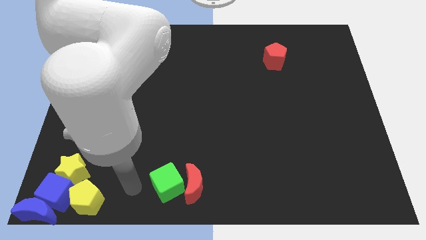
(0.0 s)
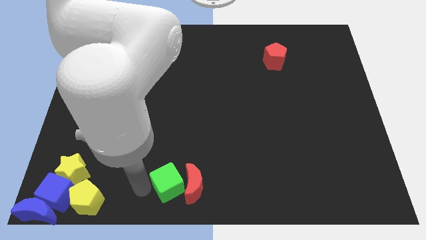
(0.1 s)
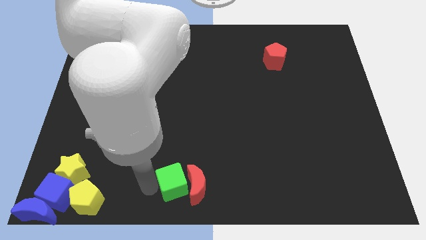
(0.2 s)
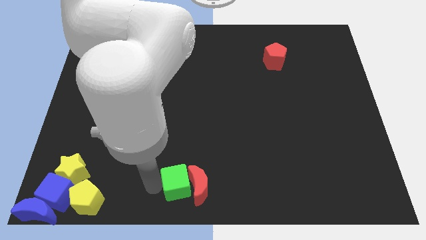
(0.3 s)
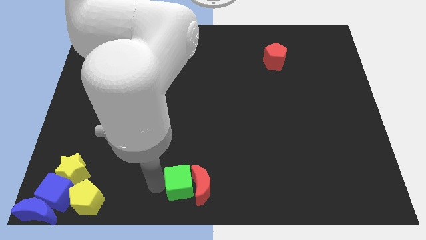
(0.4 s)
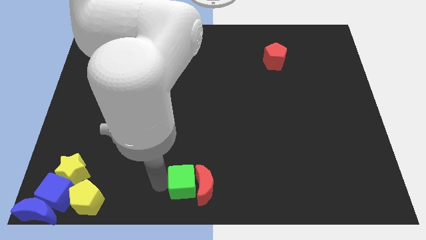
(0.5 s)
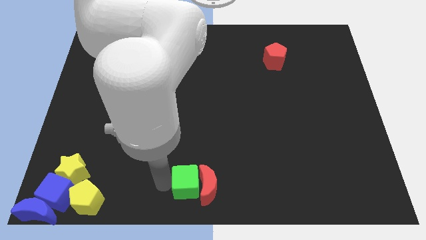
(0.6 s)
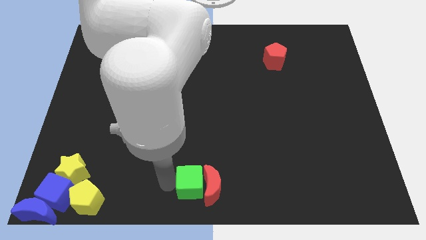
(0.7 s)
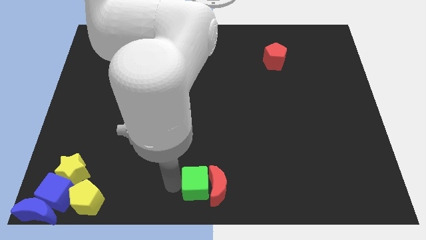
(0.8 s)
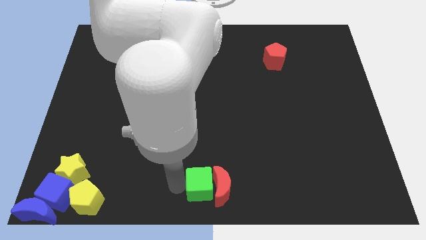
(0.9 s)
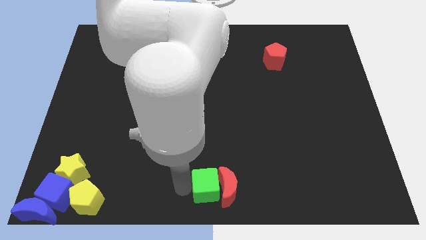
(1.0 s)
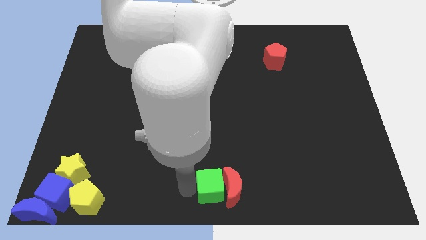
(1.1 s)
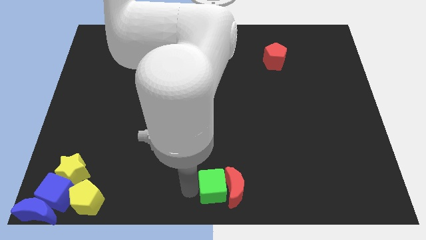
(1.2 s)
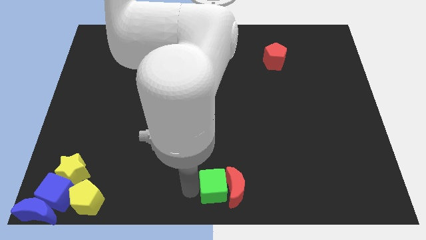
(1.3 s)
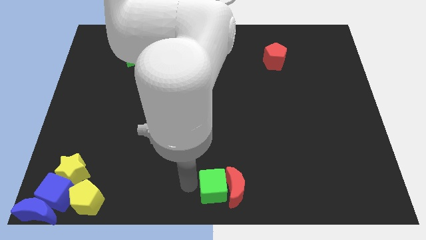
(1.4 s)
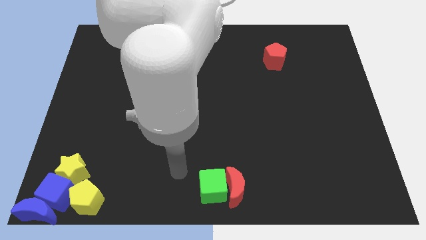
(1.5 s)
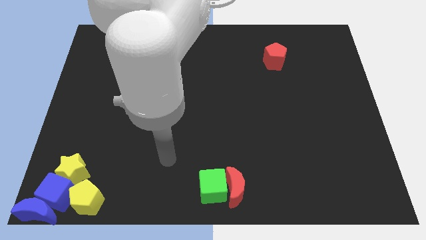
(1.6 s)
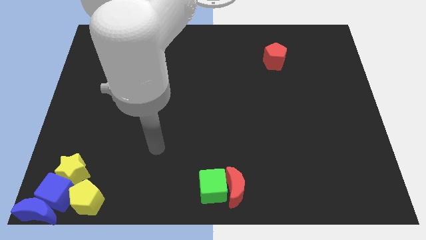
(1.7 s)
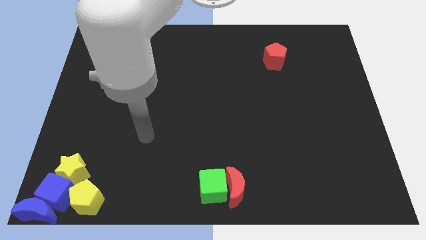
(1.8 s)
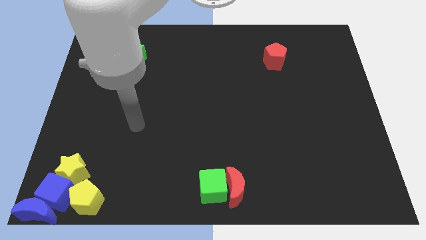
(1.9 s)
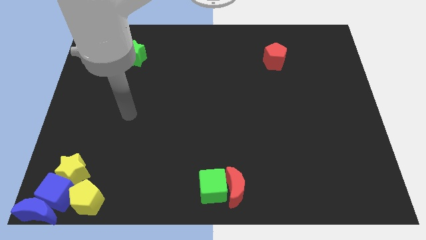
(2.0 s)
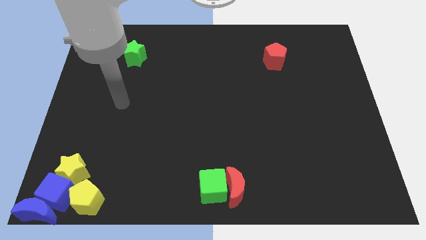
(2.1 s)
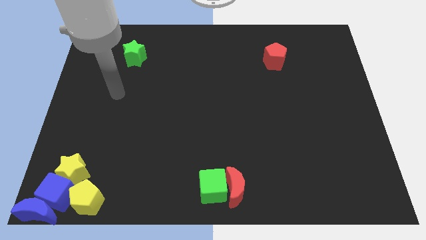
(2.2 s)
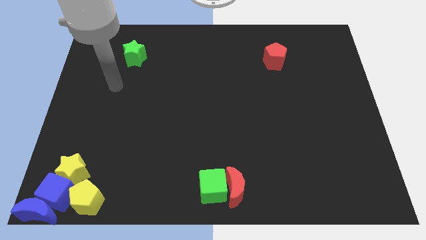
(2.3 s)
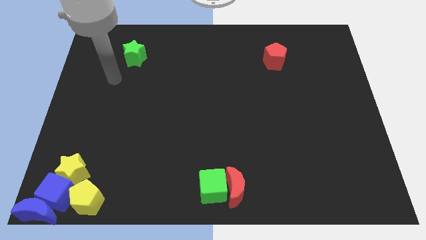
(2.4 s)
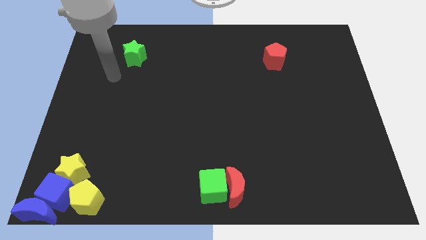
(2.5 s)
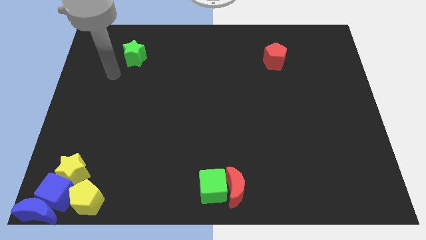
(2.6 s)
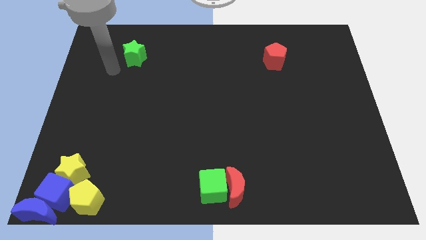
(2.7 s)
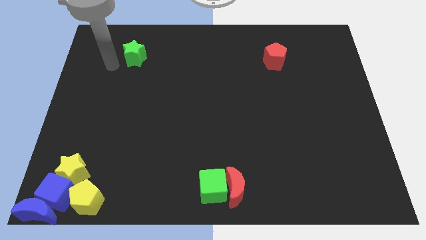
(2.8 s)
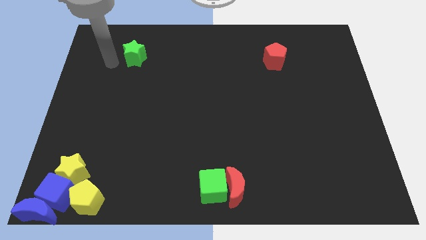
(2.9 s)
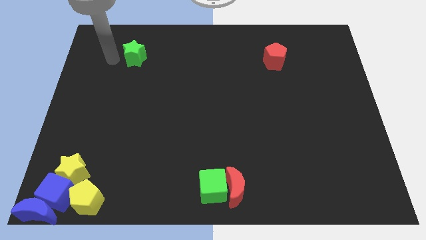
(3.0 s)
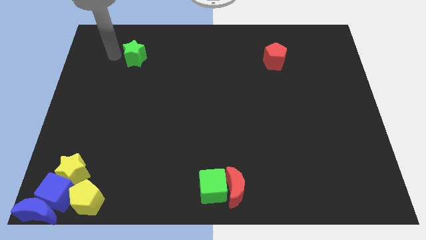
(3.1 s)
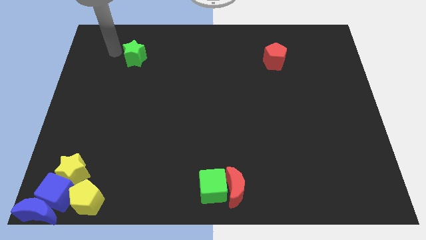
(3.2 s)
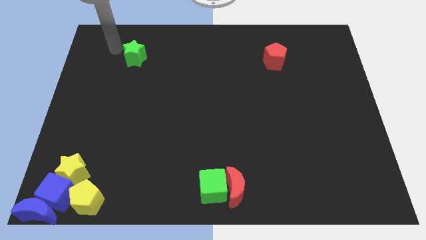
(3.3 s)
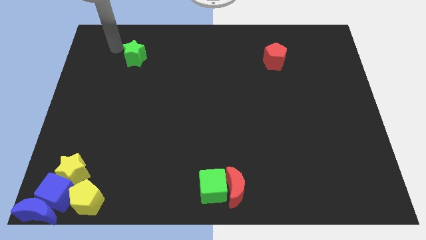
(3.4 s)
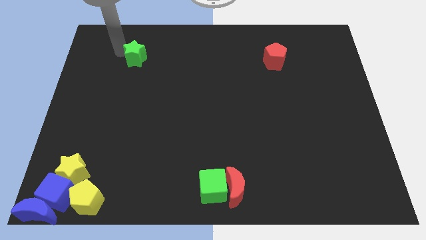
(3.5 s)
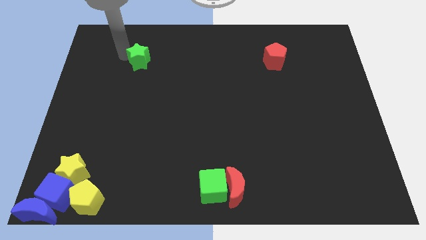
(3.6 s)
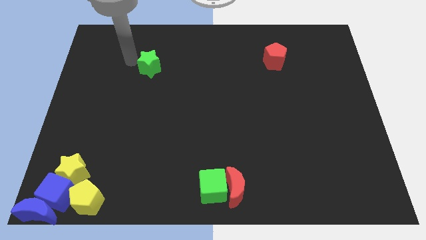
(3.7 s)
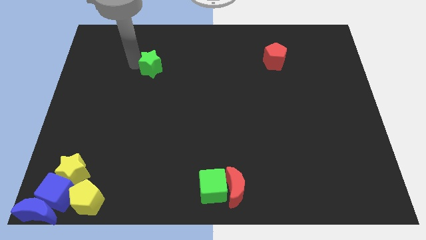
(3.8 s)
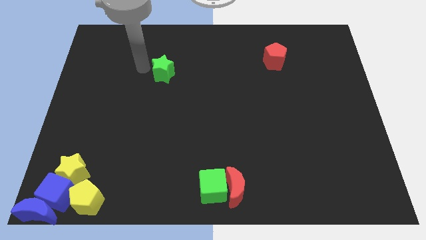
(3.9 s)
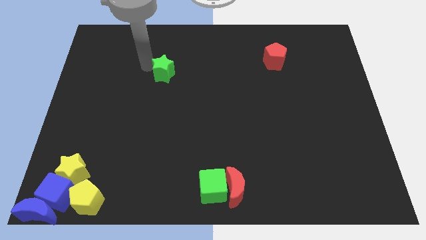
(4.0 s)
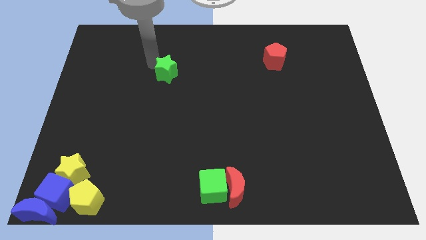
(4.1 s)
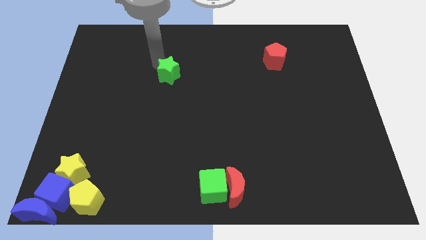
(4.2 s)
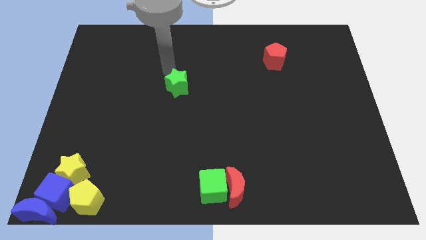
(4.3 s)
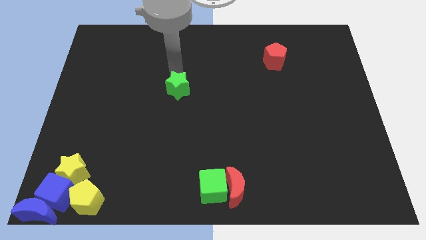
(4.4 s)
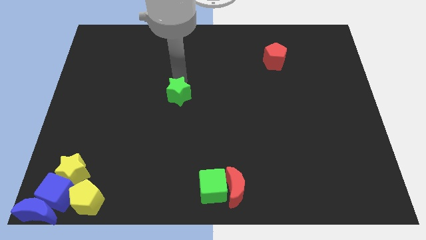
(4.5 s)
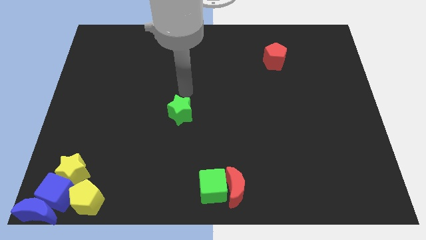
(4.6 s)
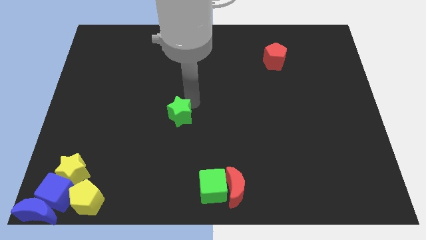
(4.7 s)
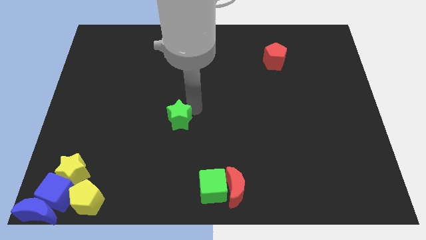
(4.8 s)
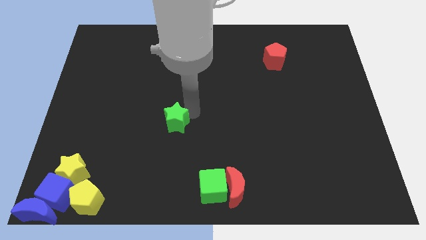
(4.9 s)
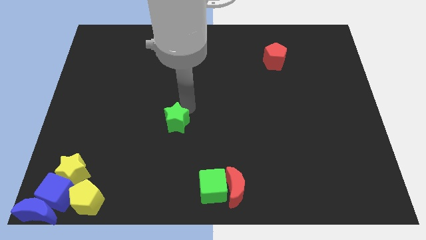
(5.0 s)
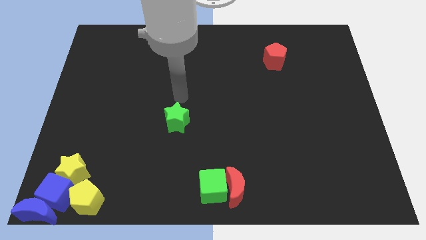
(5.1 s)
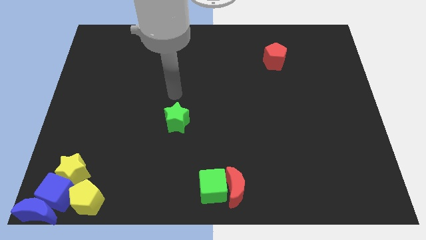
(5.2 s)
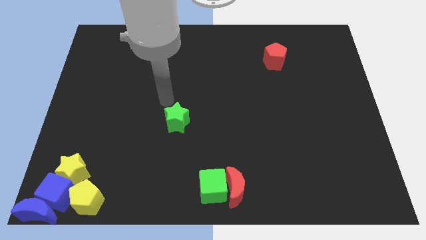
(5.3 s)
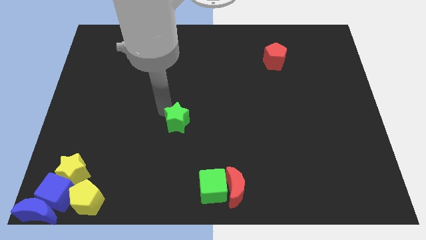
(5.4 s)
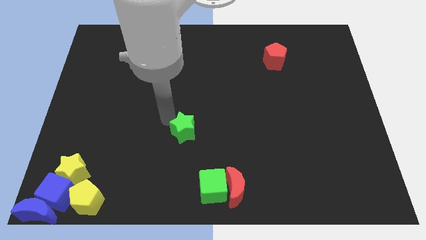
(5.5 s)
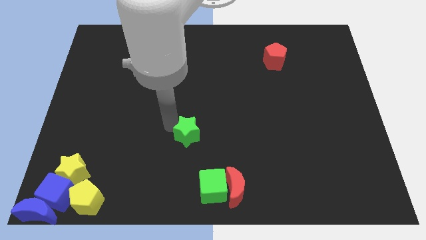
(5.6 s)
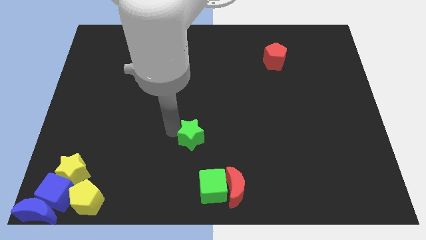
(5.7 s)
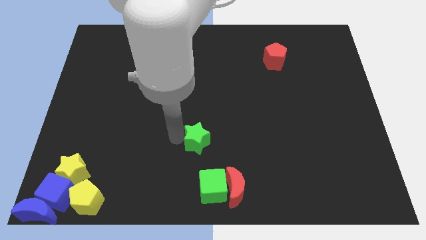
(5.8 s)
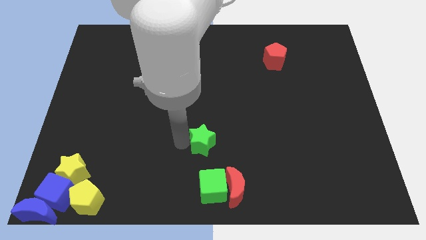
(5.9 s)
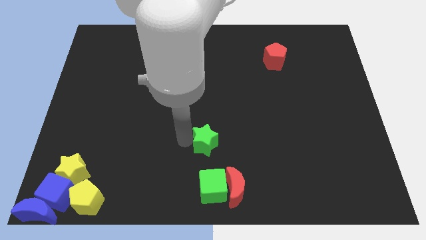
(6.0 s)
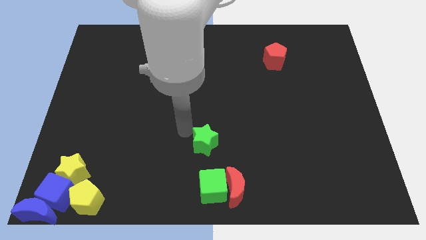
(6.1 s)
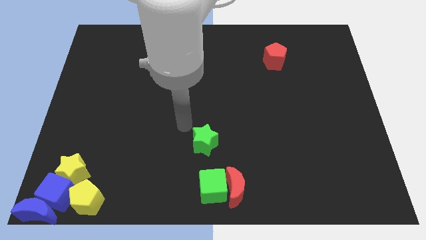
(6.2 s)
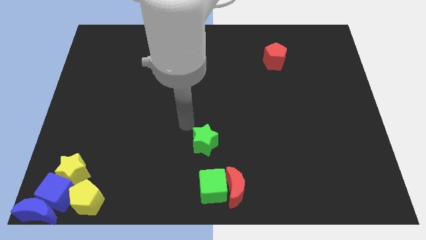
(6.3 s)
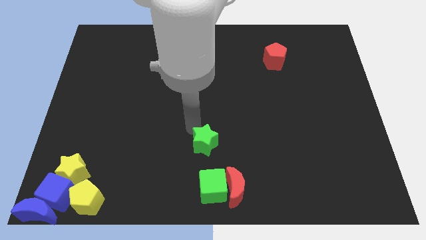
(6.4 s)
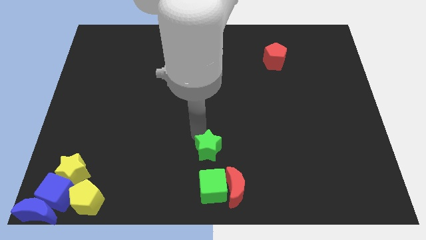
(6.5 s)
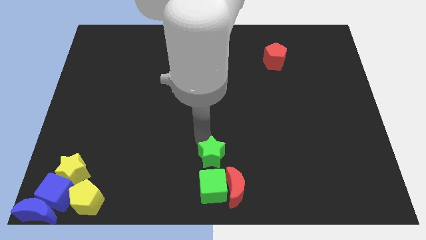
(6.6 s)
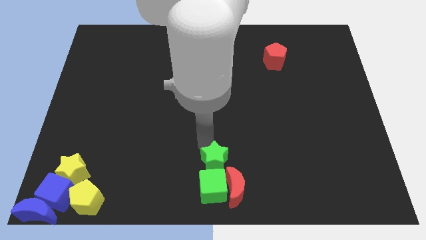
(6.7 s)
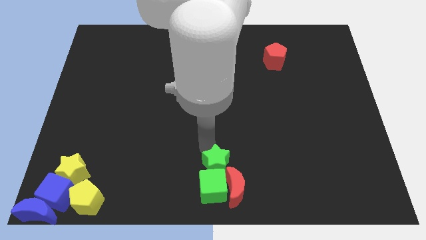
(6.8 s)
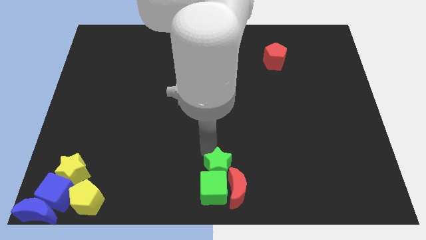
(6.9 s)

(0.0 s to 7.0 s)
move the green star to the top of the green cube

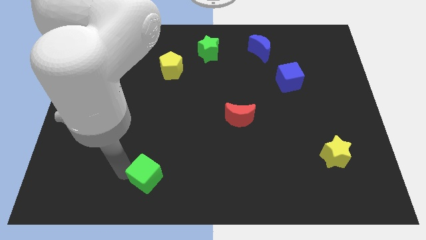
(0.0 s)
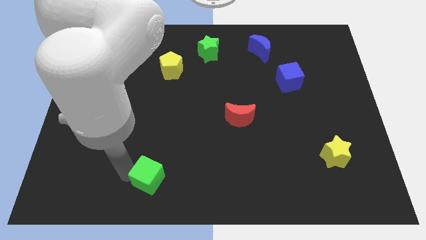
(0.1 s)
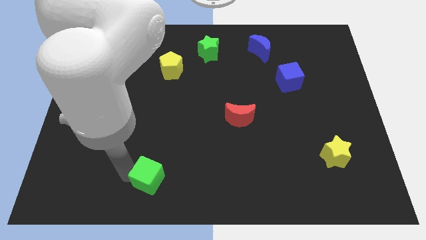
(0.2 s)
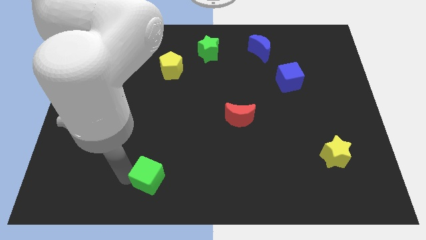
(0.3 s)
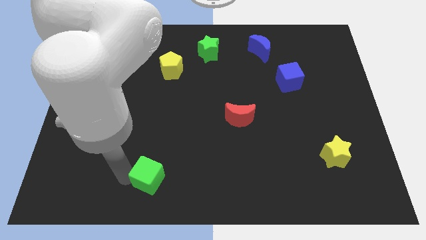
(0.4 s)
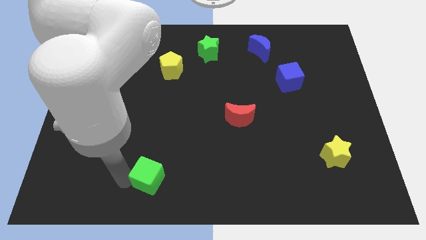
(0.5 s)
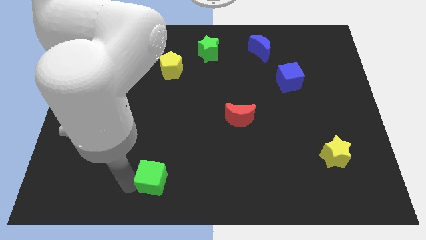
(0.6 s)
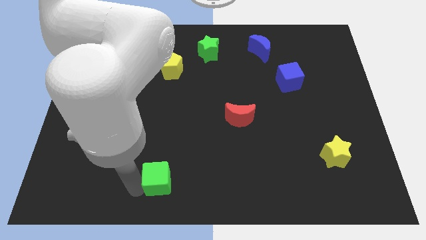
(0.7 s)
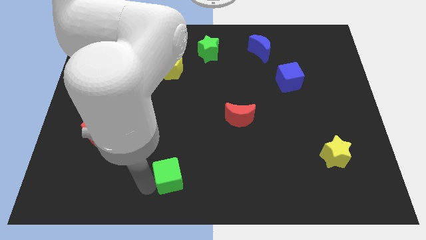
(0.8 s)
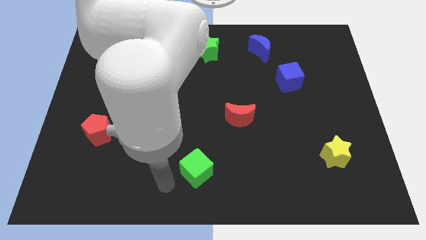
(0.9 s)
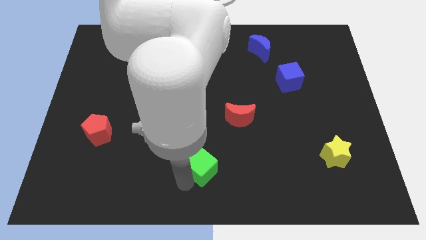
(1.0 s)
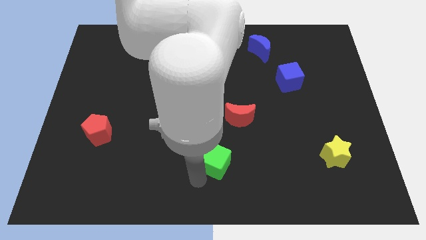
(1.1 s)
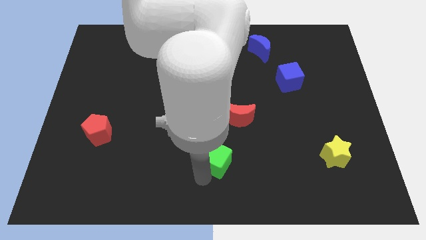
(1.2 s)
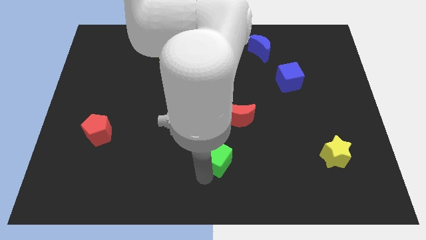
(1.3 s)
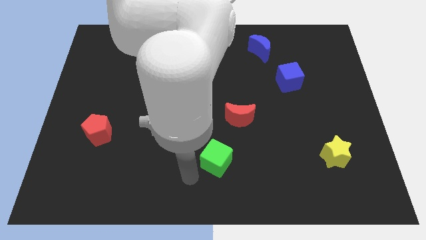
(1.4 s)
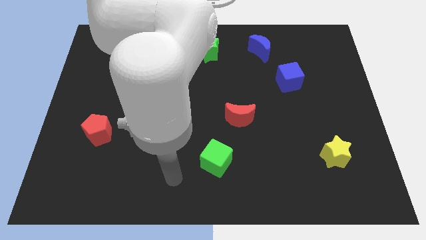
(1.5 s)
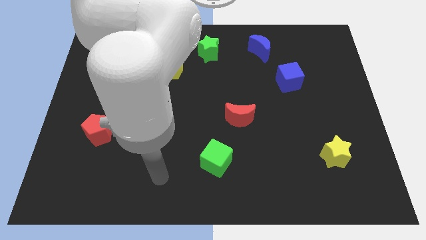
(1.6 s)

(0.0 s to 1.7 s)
push the green cube towards the center

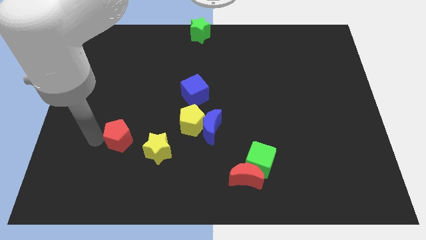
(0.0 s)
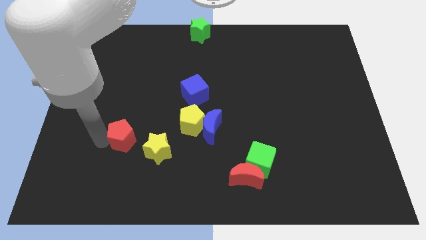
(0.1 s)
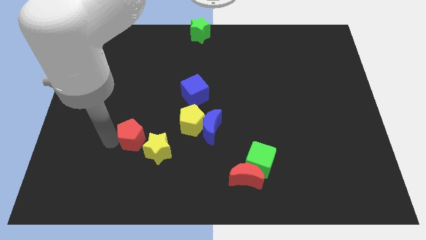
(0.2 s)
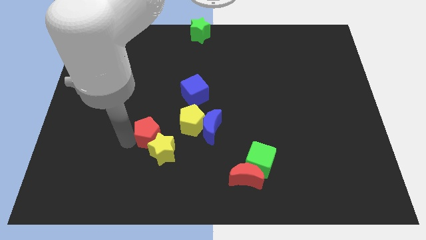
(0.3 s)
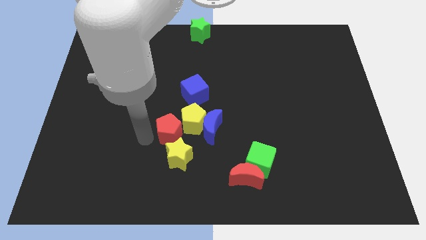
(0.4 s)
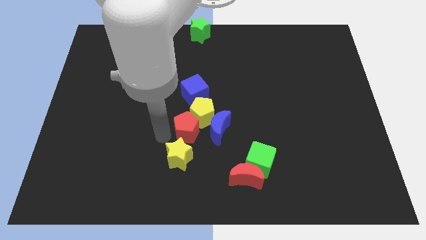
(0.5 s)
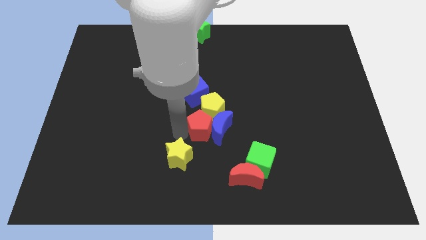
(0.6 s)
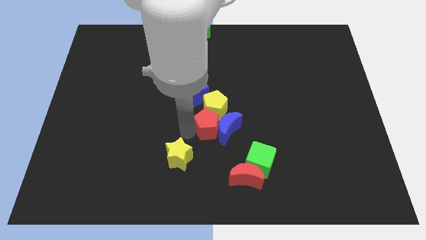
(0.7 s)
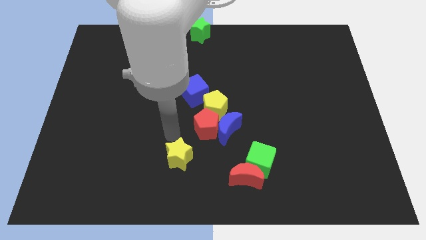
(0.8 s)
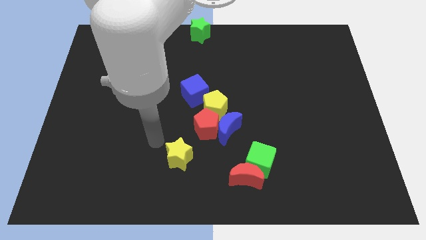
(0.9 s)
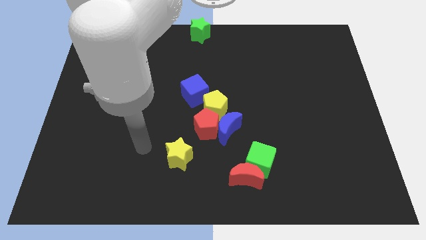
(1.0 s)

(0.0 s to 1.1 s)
push the red pentagon to the group of blocks
